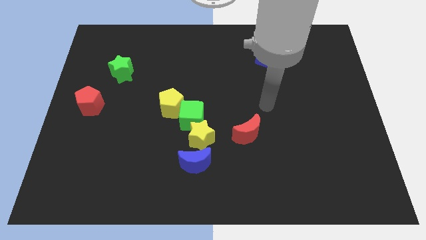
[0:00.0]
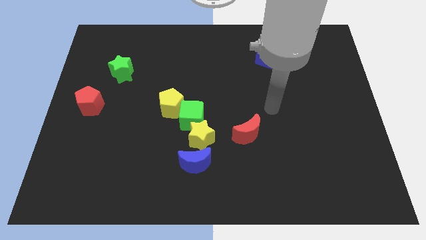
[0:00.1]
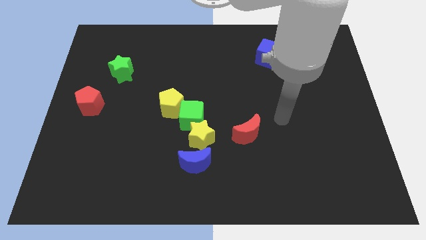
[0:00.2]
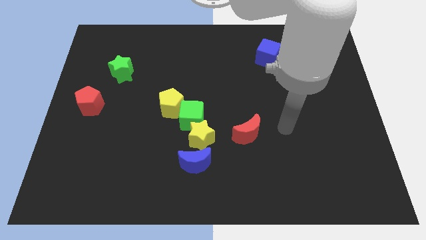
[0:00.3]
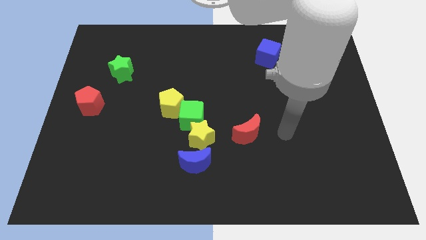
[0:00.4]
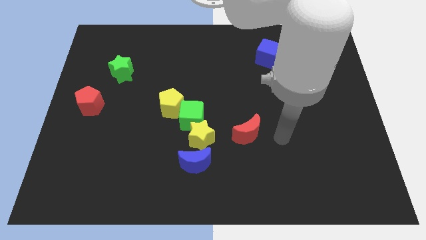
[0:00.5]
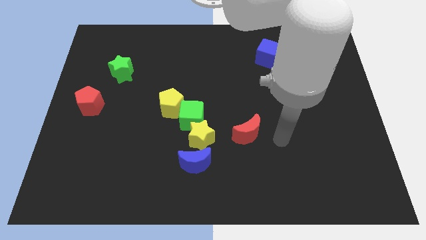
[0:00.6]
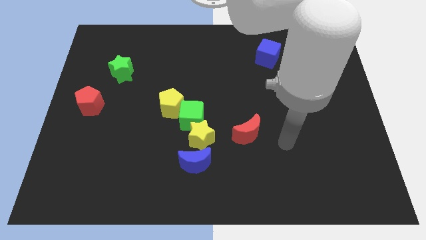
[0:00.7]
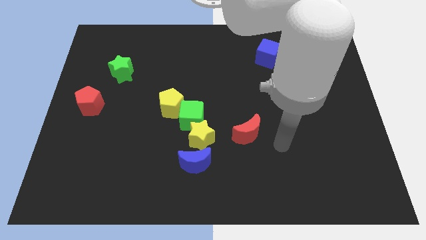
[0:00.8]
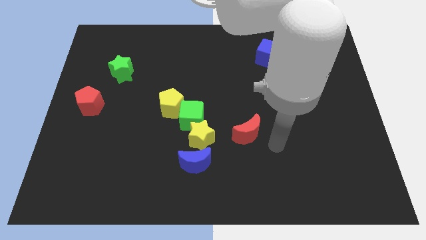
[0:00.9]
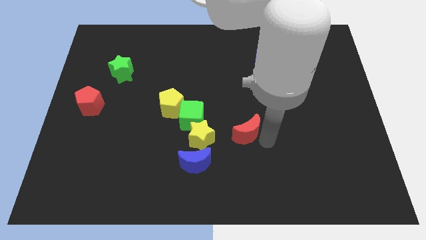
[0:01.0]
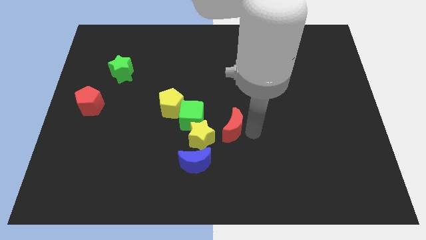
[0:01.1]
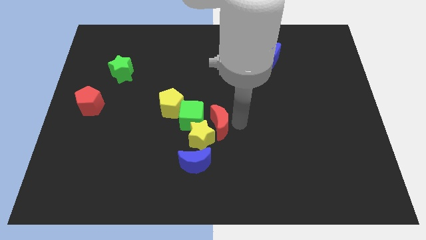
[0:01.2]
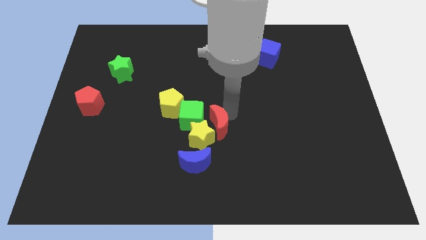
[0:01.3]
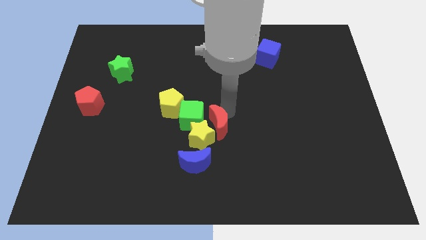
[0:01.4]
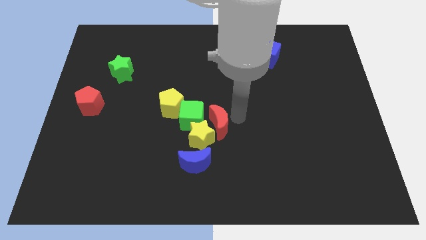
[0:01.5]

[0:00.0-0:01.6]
move the red moon slightly to the left

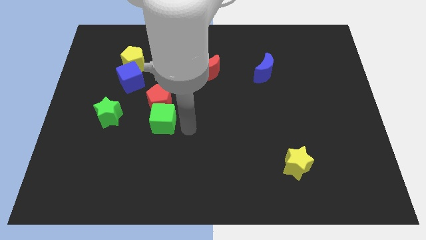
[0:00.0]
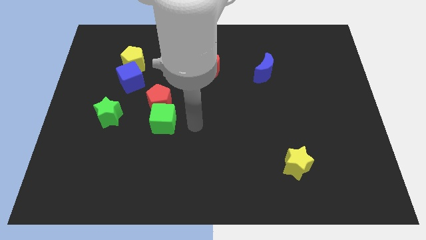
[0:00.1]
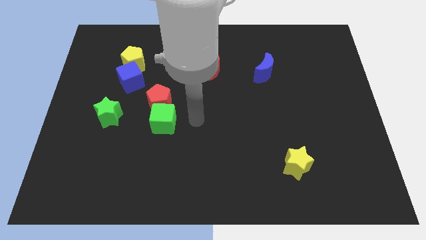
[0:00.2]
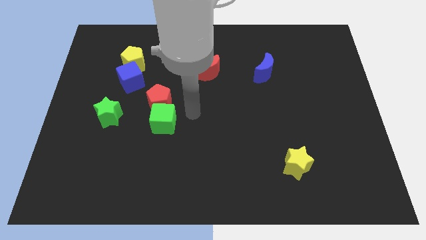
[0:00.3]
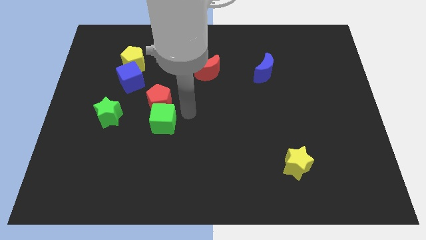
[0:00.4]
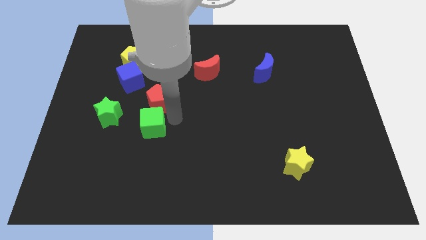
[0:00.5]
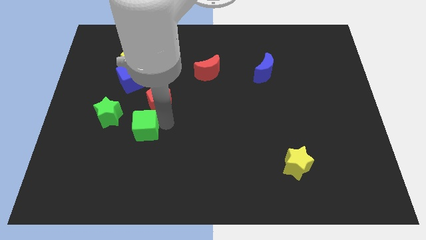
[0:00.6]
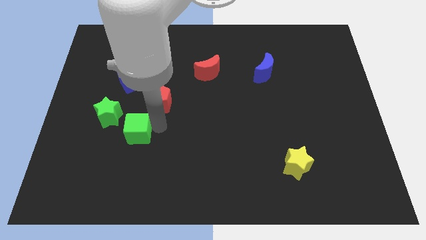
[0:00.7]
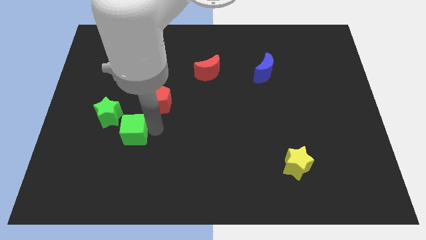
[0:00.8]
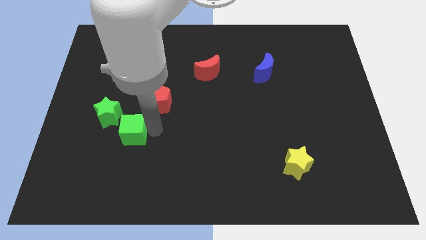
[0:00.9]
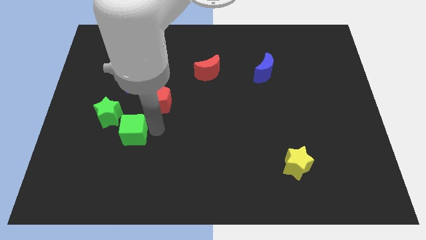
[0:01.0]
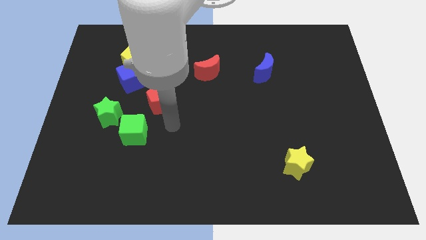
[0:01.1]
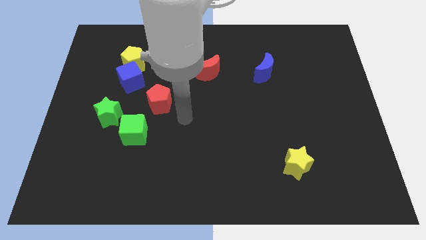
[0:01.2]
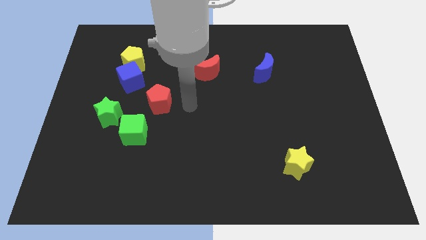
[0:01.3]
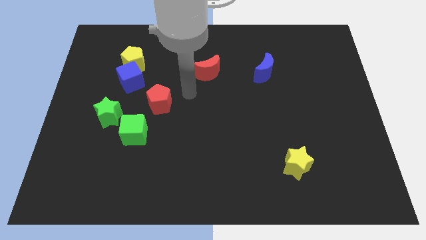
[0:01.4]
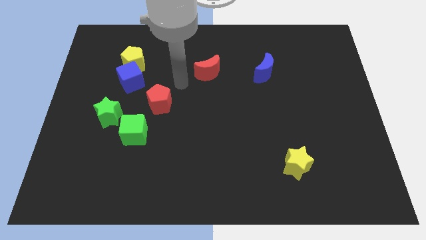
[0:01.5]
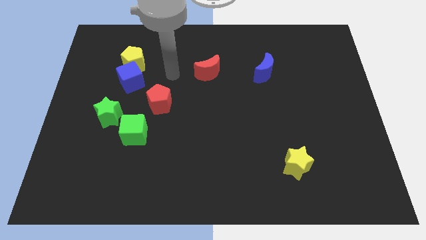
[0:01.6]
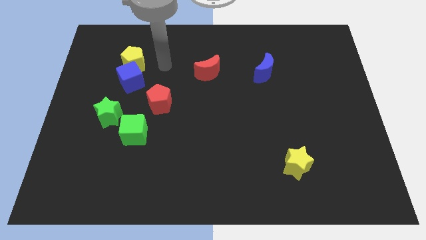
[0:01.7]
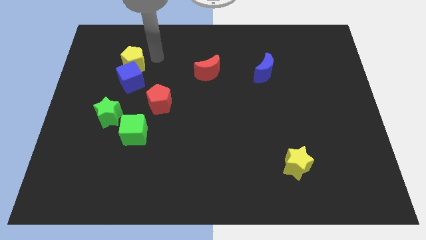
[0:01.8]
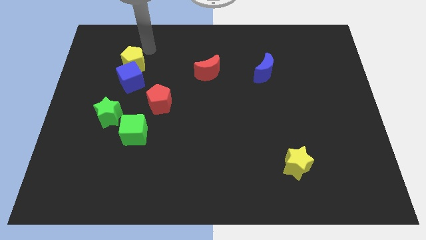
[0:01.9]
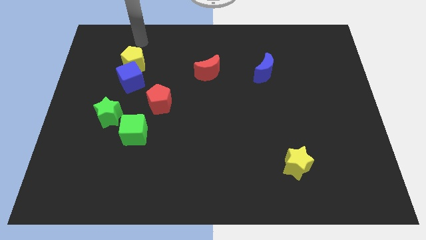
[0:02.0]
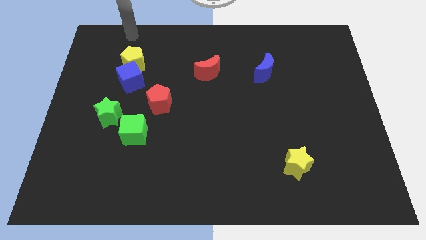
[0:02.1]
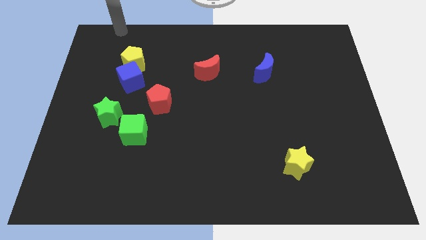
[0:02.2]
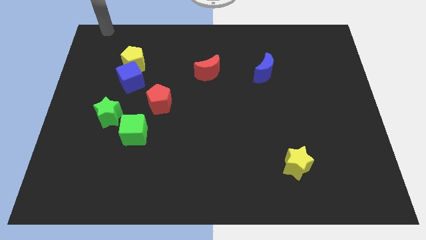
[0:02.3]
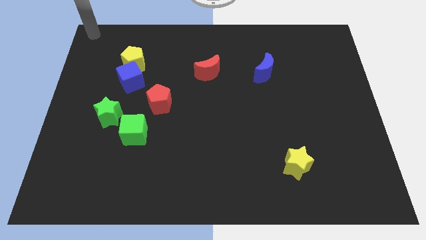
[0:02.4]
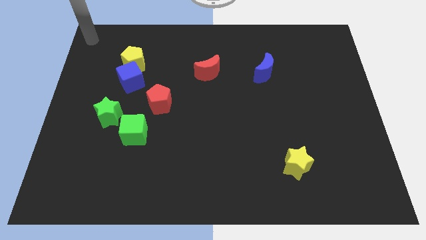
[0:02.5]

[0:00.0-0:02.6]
move green cube on left side

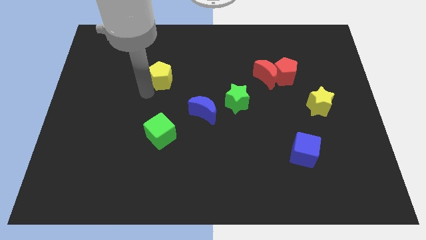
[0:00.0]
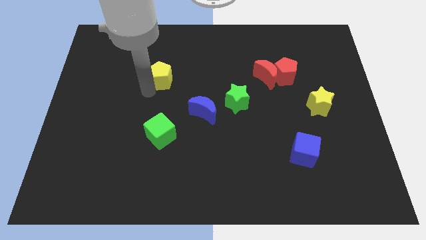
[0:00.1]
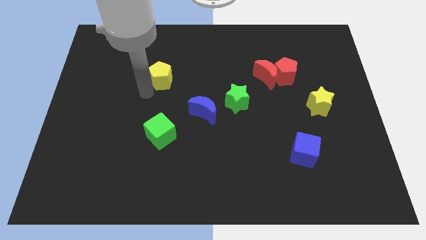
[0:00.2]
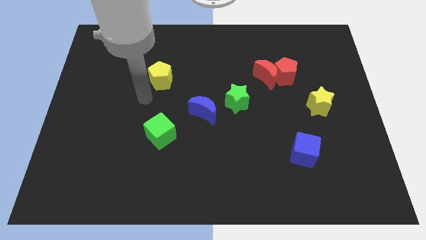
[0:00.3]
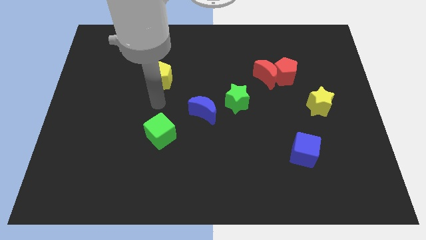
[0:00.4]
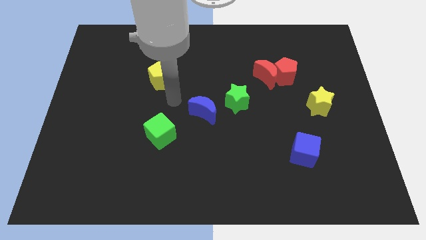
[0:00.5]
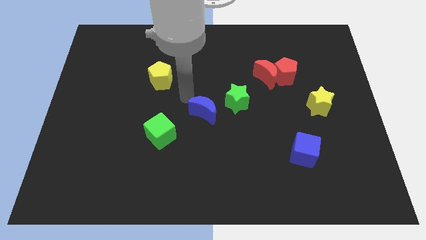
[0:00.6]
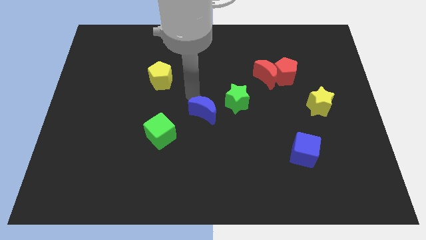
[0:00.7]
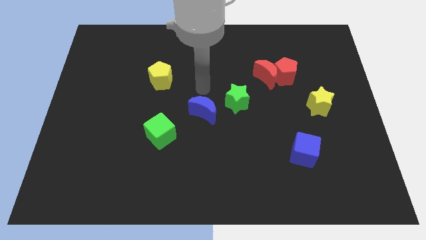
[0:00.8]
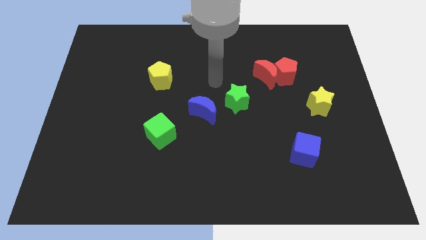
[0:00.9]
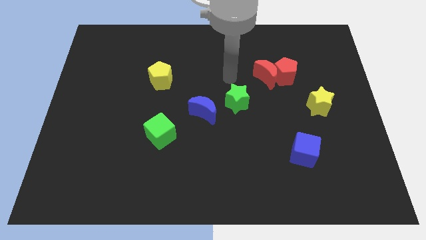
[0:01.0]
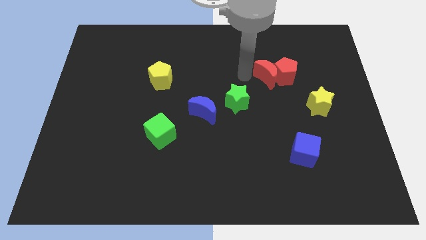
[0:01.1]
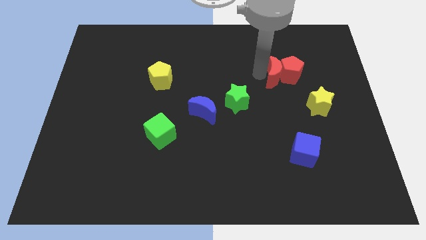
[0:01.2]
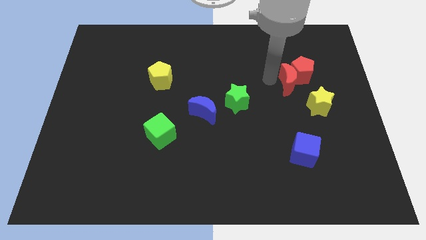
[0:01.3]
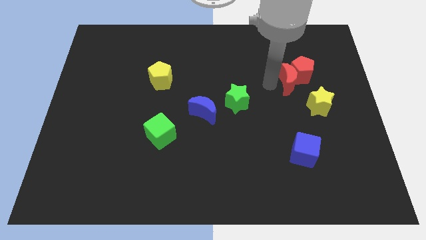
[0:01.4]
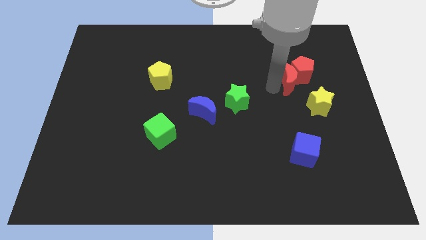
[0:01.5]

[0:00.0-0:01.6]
move the red crescent at the left side of the board slightly

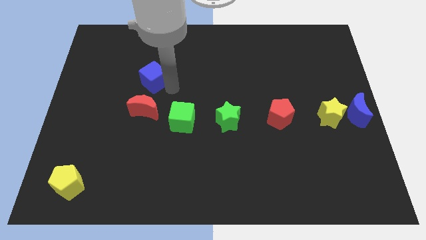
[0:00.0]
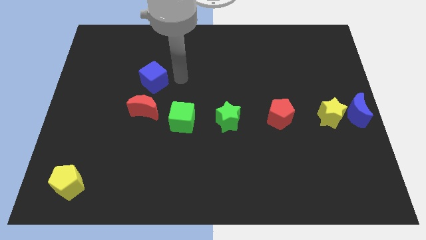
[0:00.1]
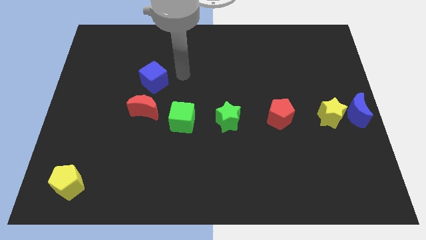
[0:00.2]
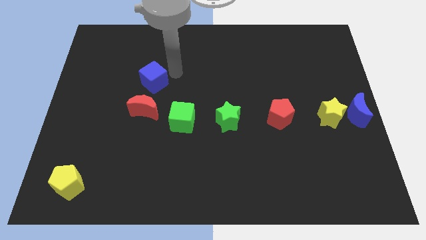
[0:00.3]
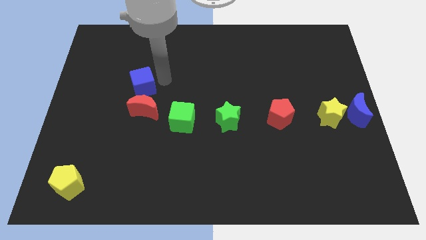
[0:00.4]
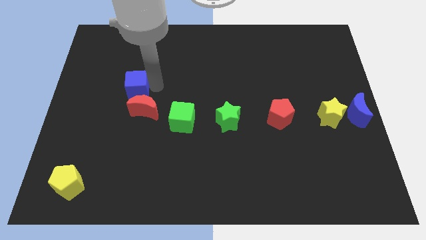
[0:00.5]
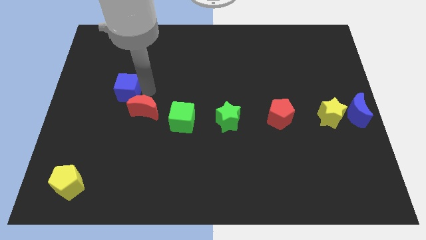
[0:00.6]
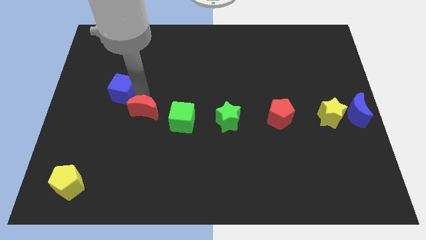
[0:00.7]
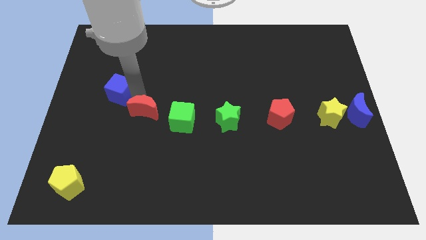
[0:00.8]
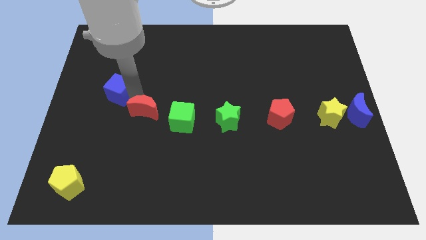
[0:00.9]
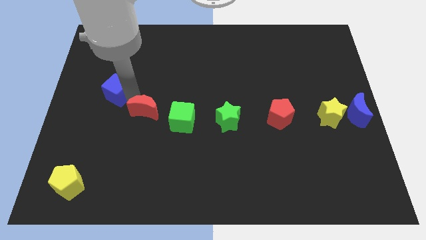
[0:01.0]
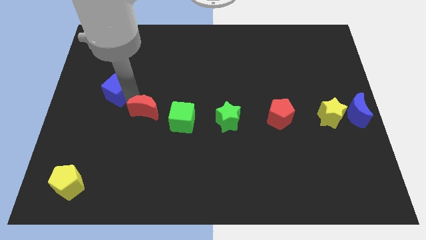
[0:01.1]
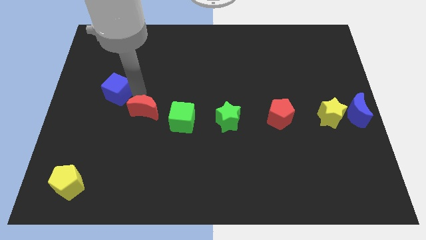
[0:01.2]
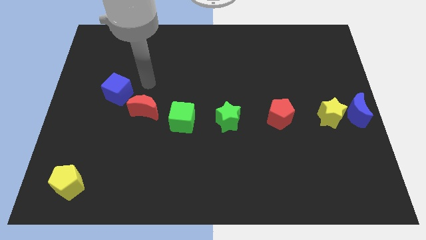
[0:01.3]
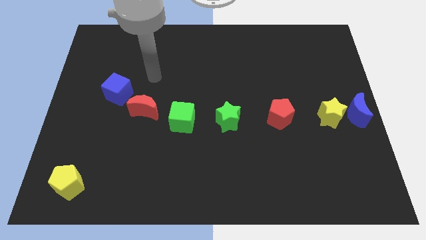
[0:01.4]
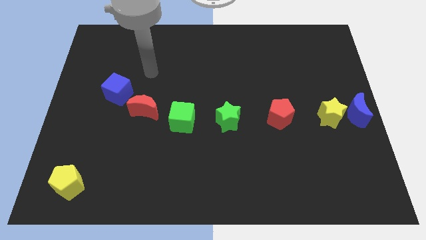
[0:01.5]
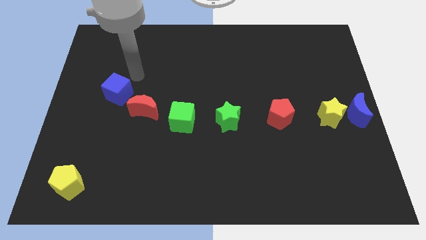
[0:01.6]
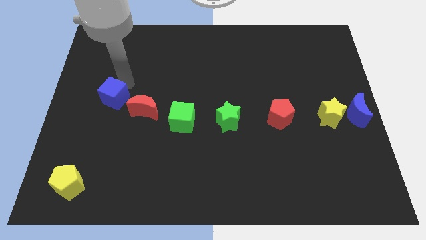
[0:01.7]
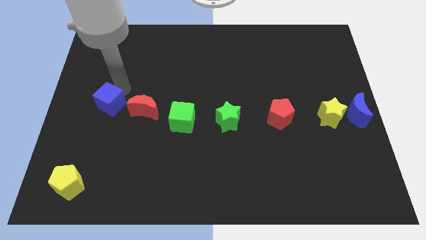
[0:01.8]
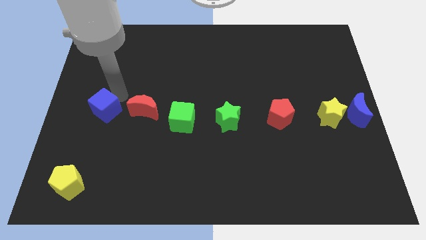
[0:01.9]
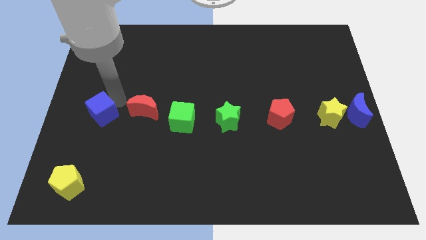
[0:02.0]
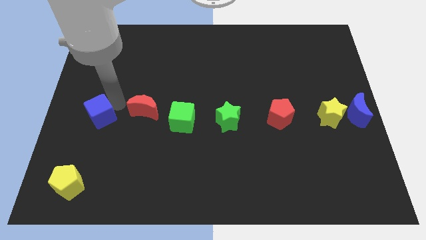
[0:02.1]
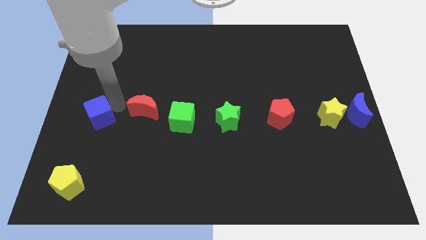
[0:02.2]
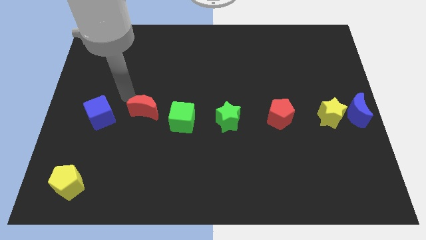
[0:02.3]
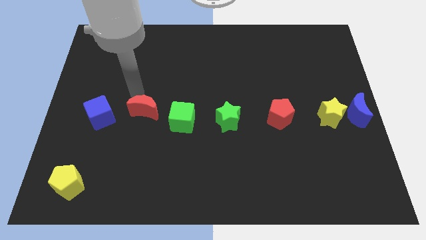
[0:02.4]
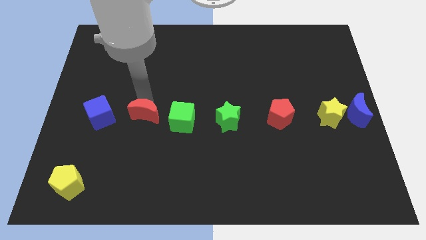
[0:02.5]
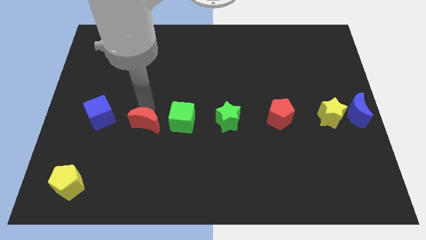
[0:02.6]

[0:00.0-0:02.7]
place blue cube to the right of red crescent

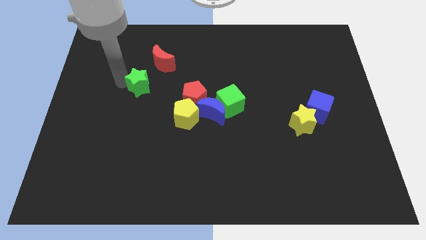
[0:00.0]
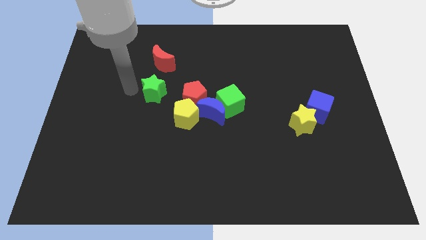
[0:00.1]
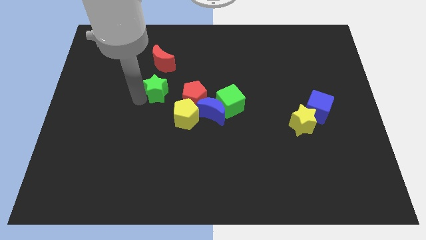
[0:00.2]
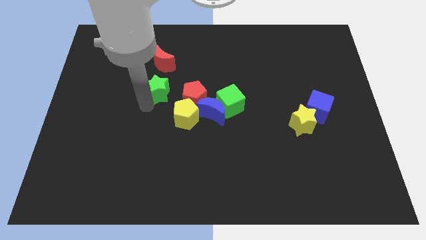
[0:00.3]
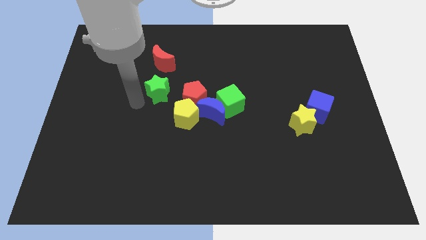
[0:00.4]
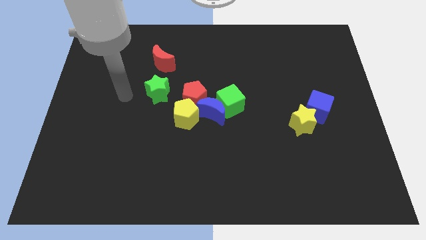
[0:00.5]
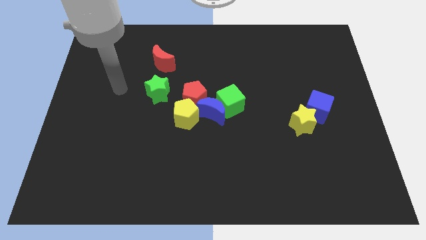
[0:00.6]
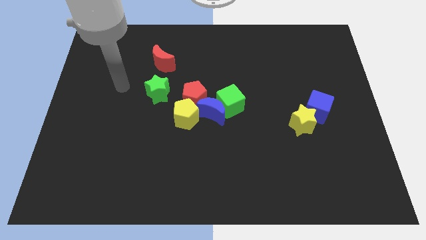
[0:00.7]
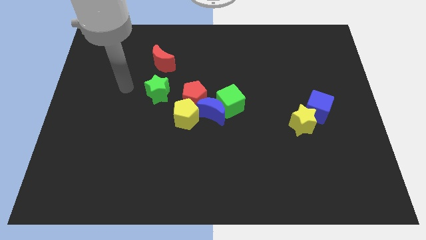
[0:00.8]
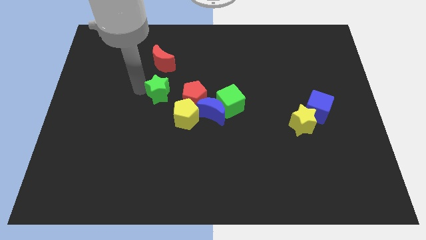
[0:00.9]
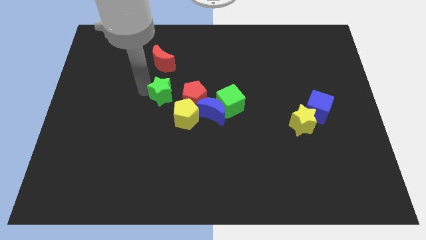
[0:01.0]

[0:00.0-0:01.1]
move the green star to the top left of the yellow pentagon
